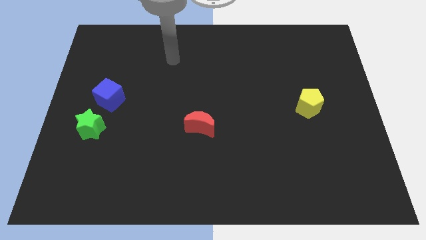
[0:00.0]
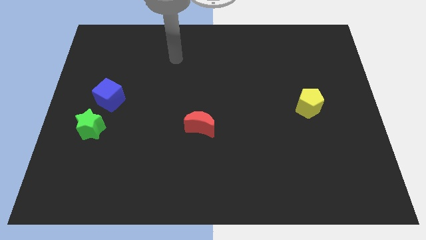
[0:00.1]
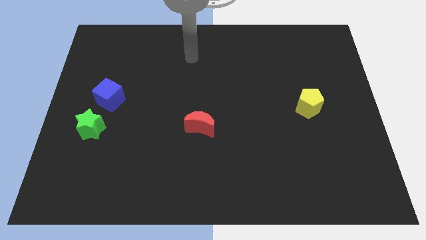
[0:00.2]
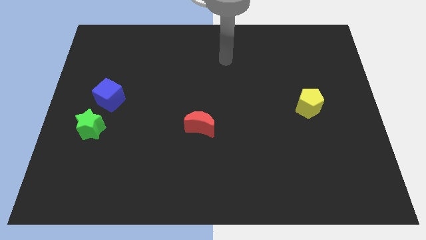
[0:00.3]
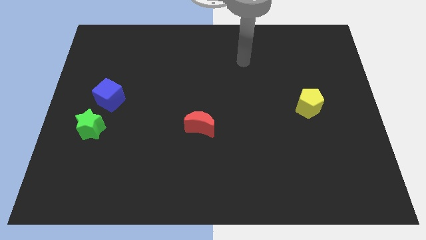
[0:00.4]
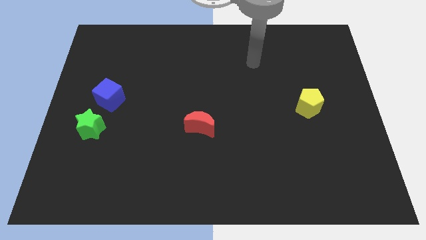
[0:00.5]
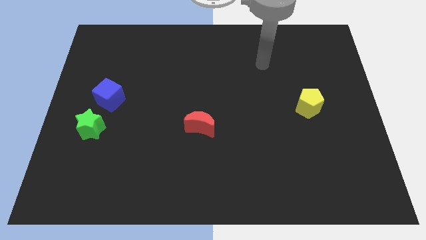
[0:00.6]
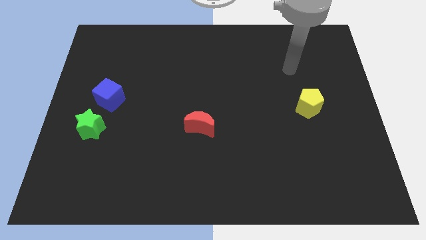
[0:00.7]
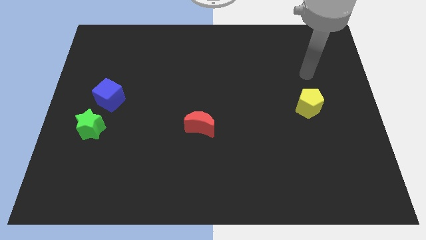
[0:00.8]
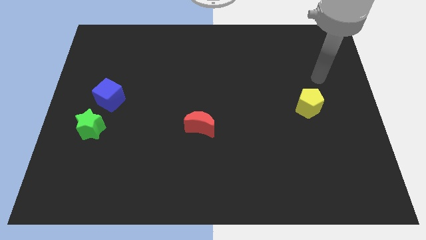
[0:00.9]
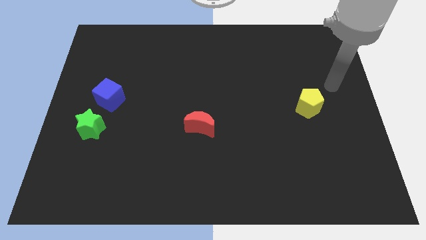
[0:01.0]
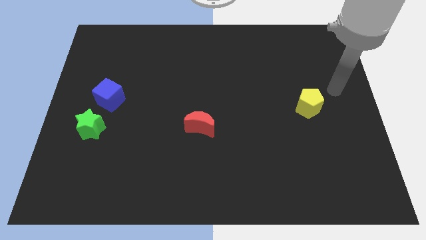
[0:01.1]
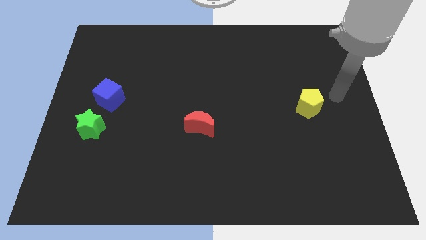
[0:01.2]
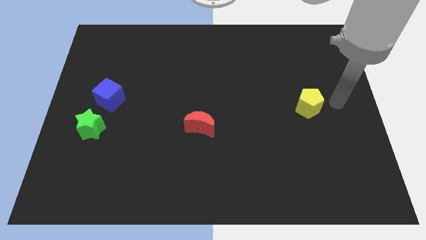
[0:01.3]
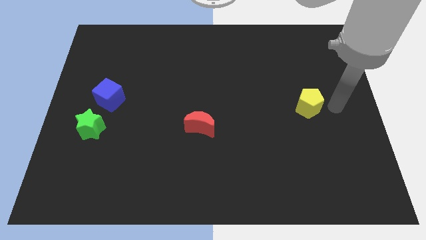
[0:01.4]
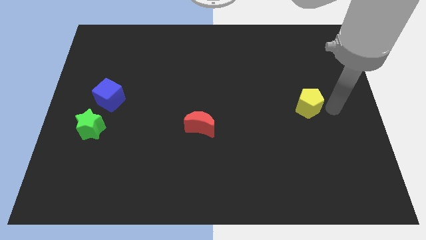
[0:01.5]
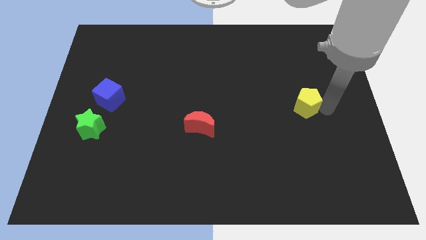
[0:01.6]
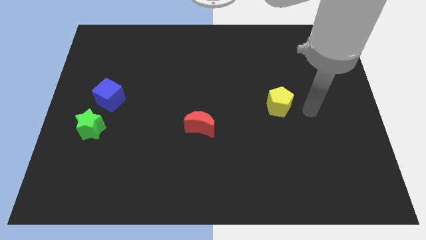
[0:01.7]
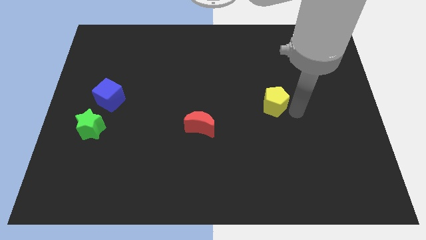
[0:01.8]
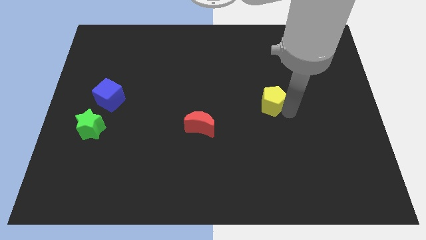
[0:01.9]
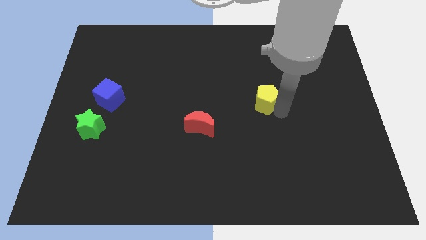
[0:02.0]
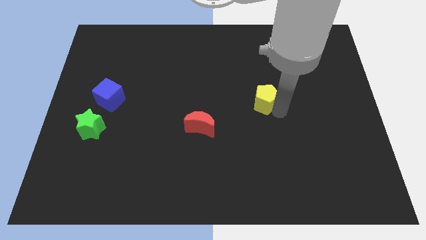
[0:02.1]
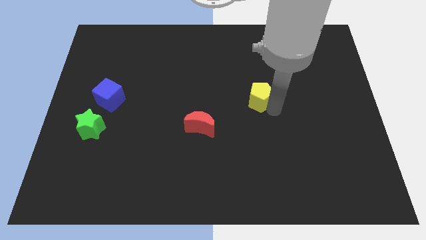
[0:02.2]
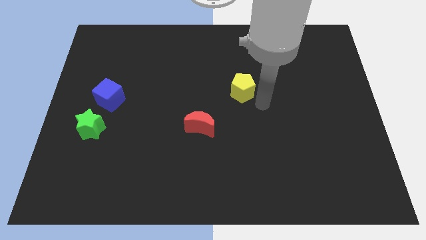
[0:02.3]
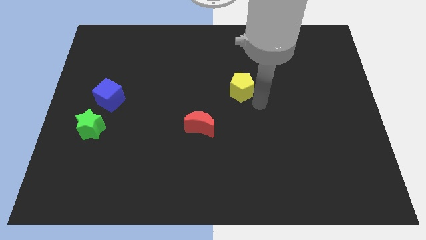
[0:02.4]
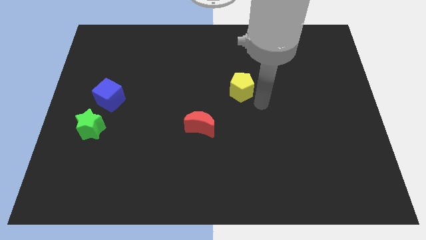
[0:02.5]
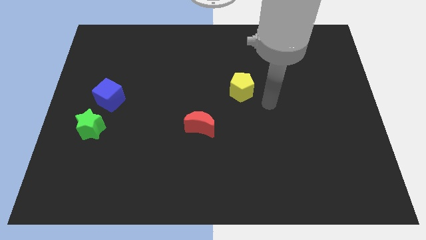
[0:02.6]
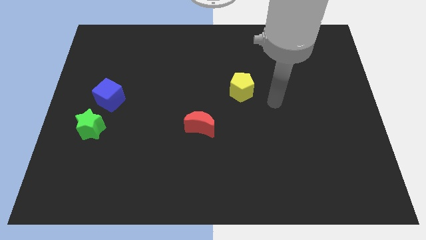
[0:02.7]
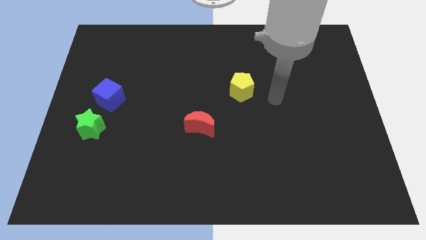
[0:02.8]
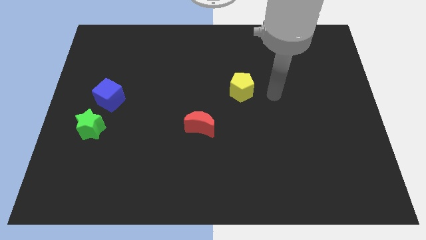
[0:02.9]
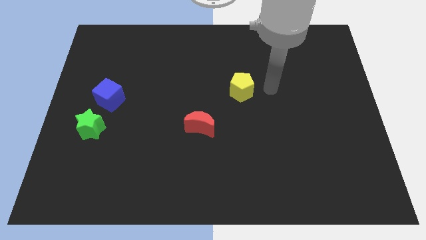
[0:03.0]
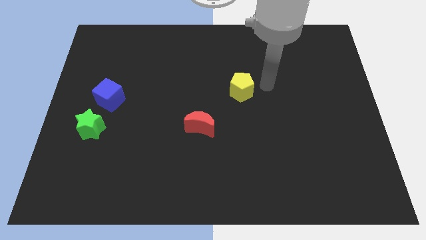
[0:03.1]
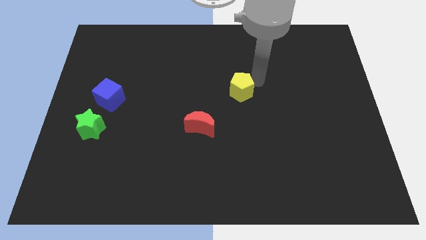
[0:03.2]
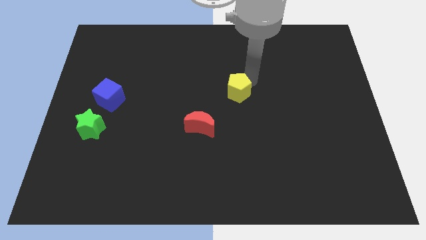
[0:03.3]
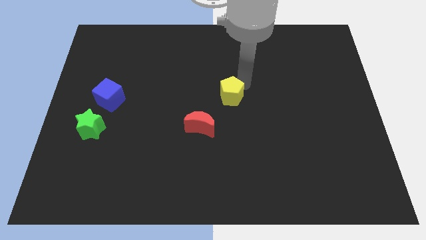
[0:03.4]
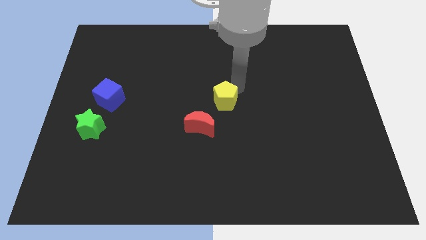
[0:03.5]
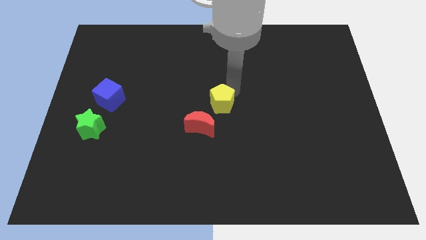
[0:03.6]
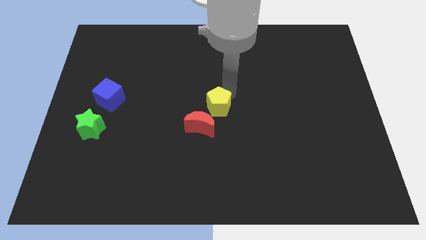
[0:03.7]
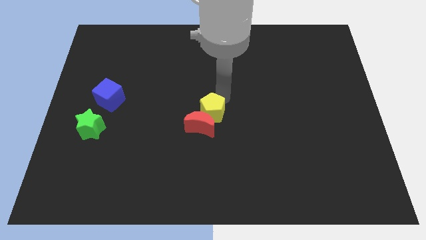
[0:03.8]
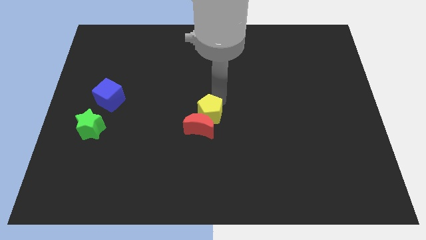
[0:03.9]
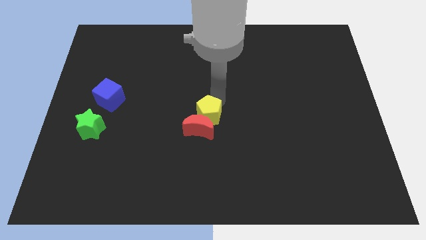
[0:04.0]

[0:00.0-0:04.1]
push the yellow block close to the red moon

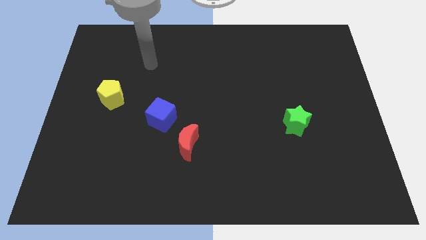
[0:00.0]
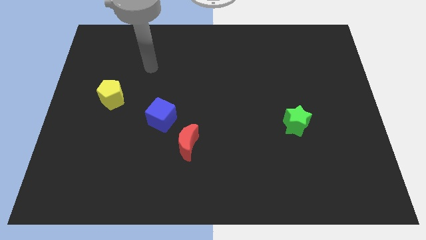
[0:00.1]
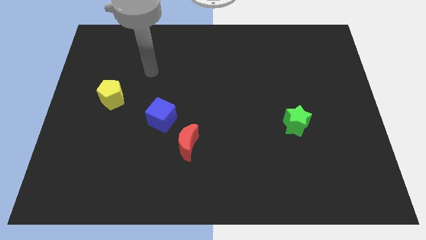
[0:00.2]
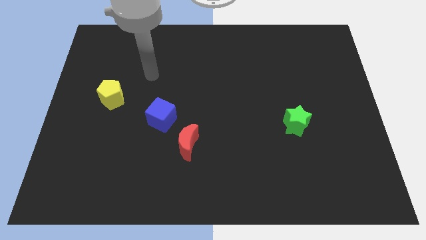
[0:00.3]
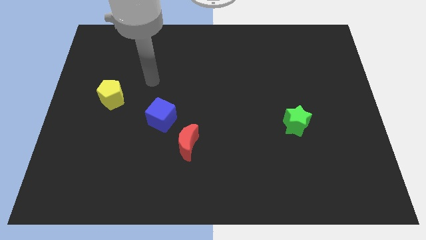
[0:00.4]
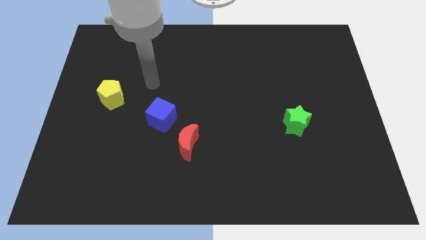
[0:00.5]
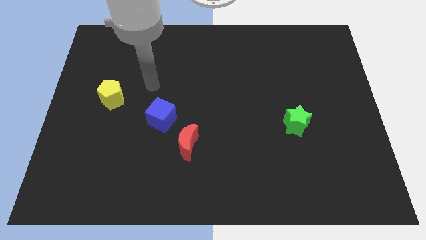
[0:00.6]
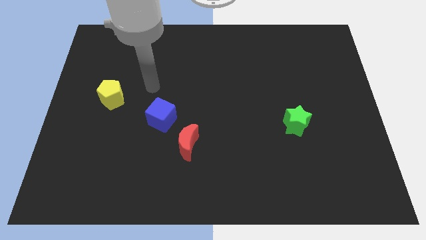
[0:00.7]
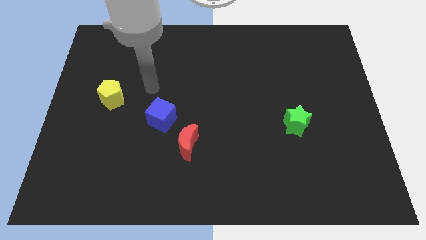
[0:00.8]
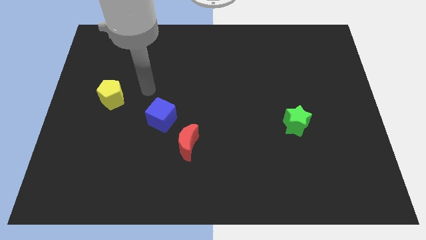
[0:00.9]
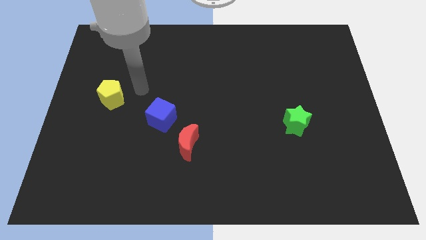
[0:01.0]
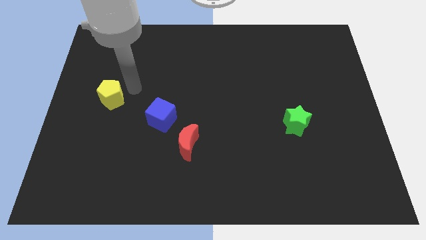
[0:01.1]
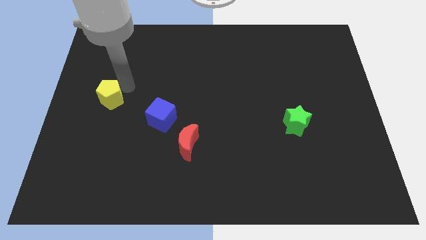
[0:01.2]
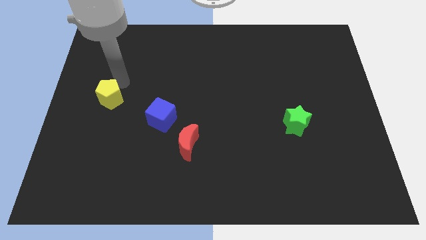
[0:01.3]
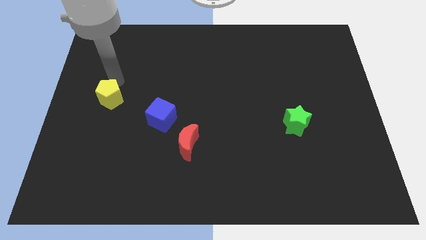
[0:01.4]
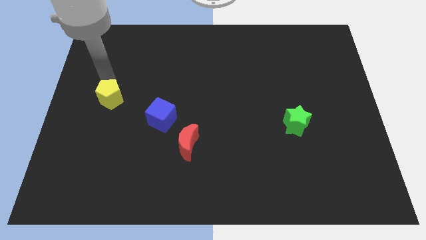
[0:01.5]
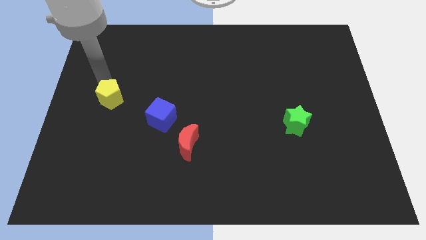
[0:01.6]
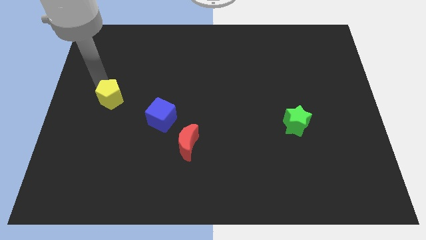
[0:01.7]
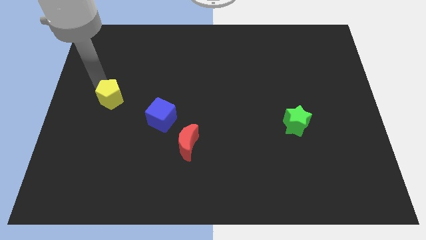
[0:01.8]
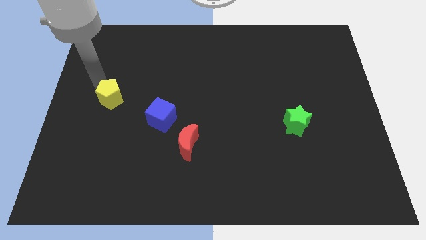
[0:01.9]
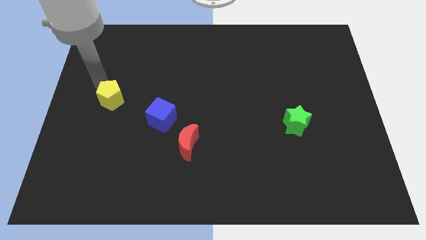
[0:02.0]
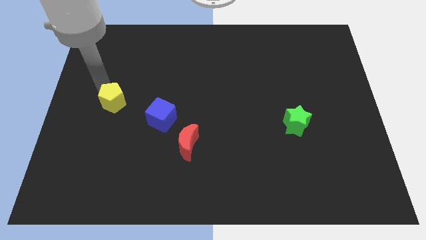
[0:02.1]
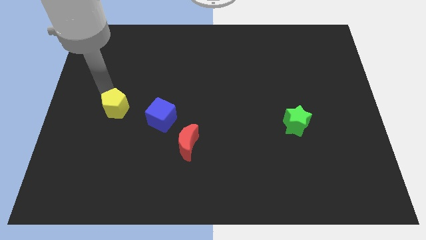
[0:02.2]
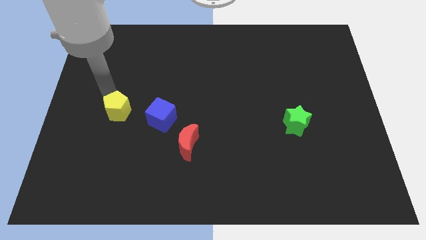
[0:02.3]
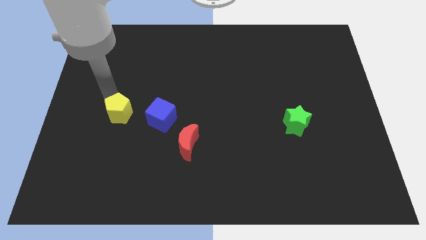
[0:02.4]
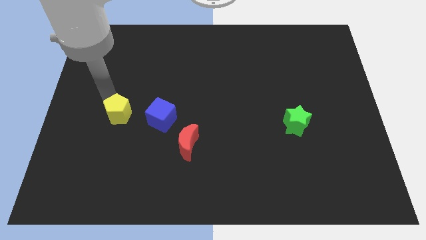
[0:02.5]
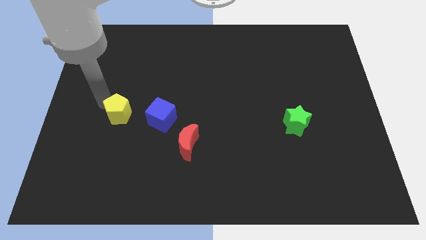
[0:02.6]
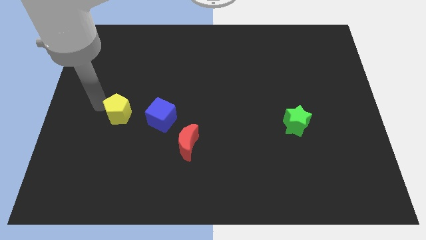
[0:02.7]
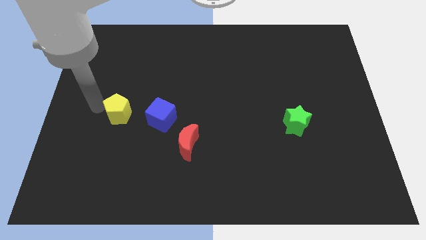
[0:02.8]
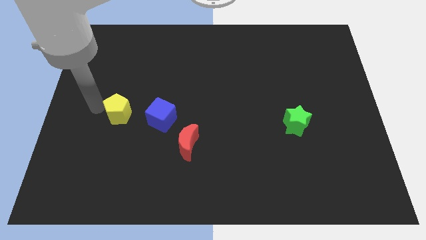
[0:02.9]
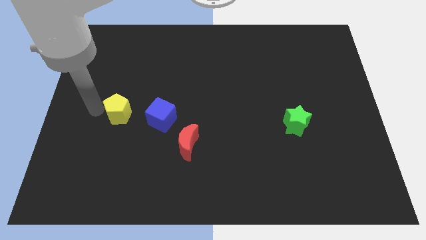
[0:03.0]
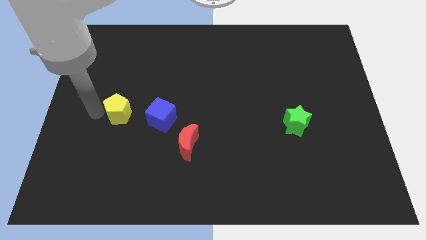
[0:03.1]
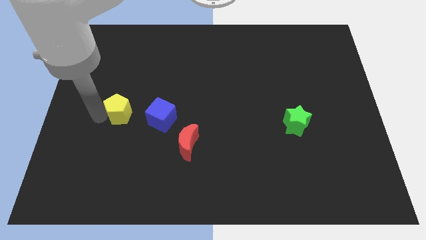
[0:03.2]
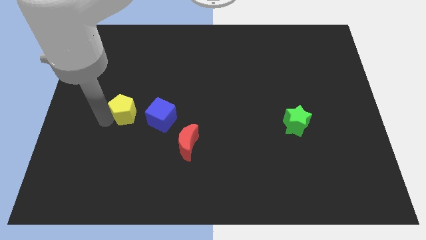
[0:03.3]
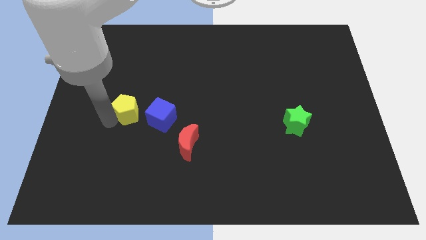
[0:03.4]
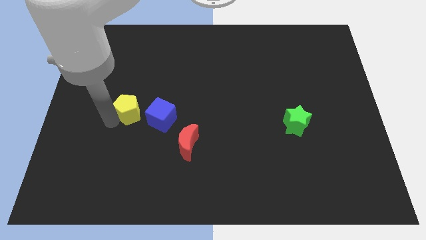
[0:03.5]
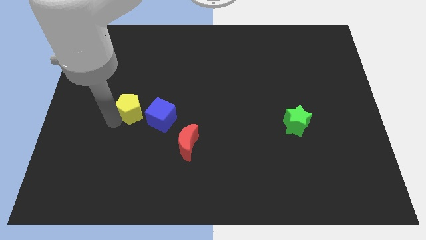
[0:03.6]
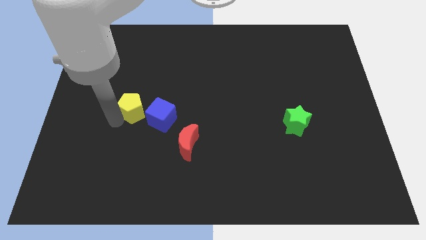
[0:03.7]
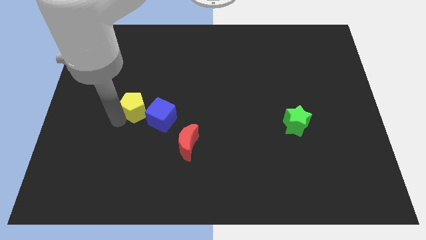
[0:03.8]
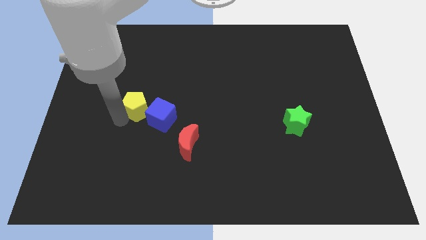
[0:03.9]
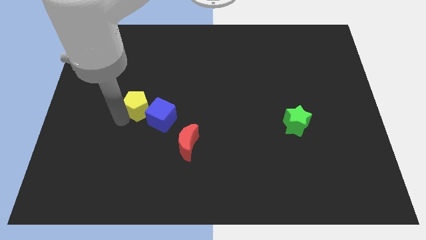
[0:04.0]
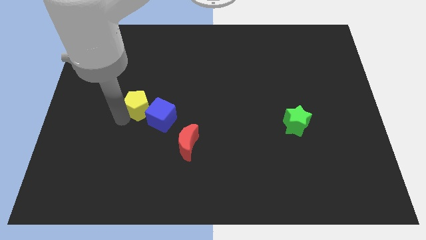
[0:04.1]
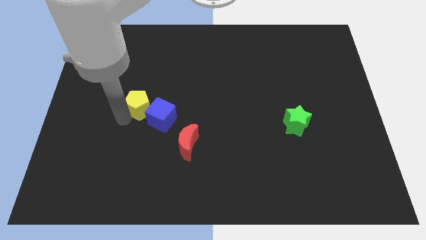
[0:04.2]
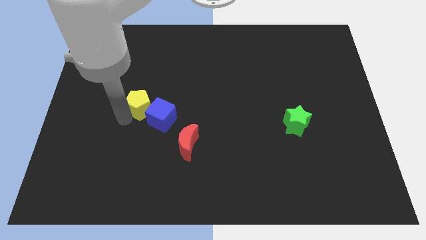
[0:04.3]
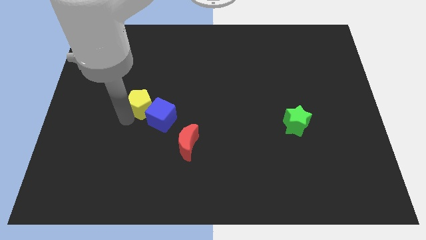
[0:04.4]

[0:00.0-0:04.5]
move the pentagon next to the cube

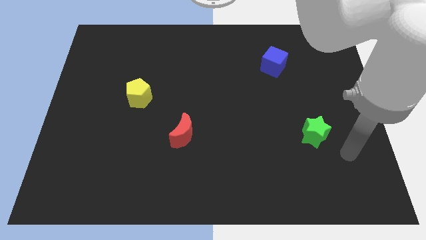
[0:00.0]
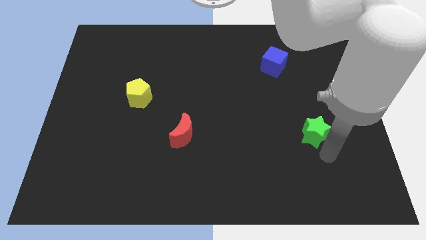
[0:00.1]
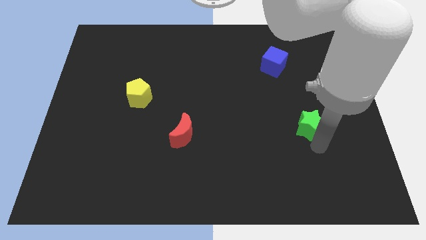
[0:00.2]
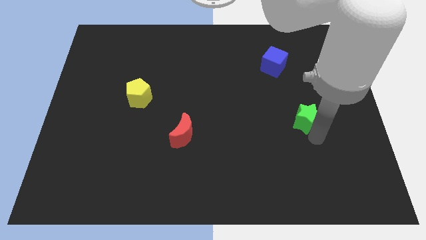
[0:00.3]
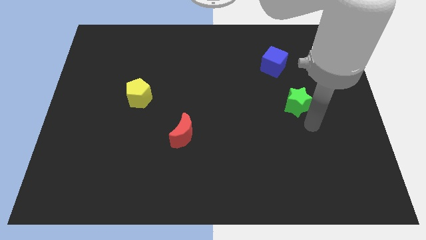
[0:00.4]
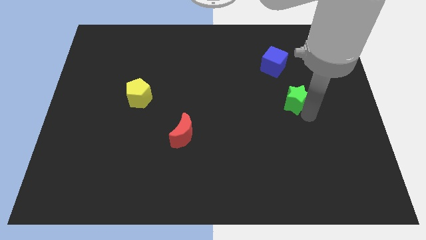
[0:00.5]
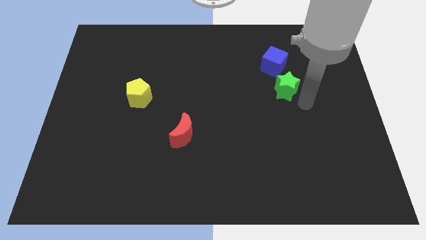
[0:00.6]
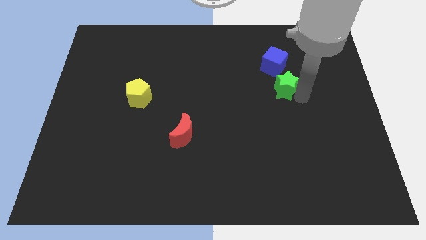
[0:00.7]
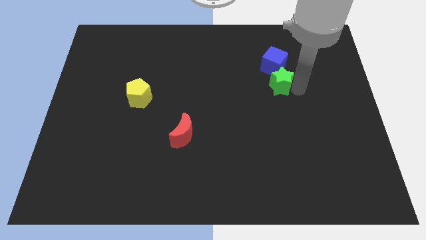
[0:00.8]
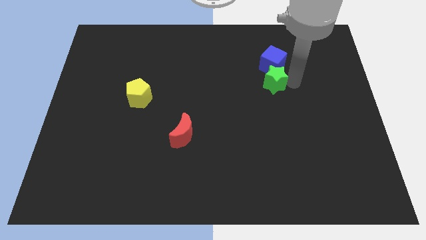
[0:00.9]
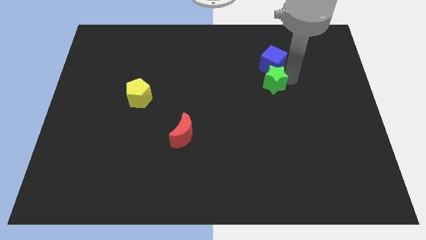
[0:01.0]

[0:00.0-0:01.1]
push the green block to the cube
